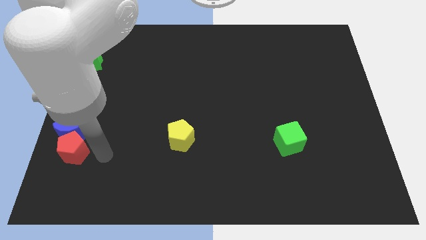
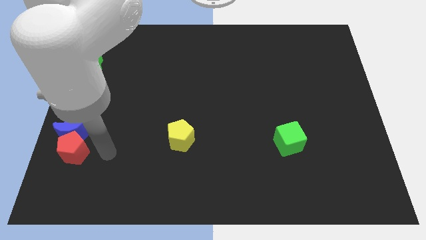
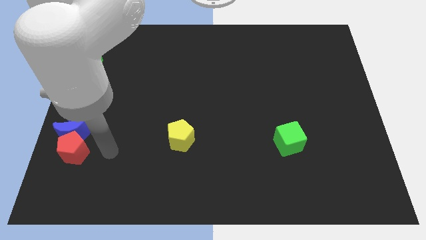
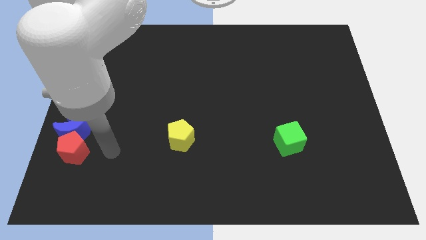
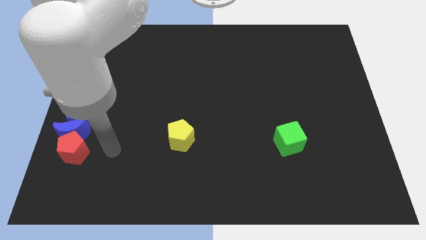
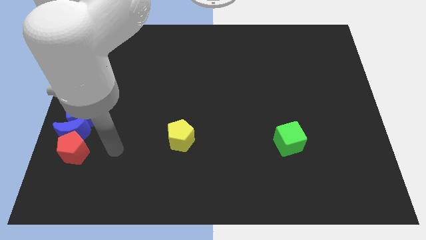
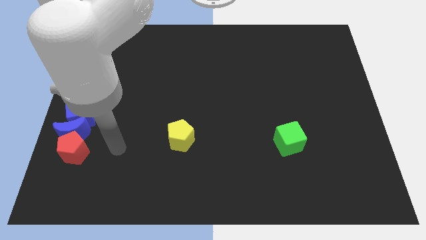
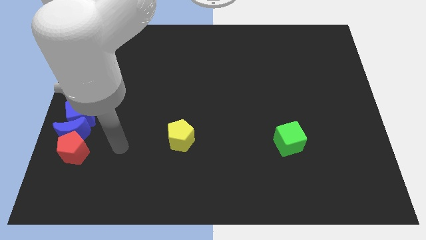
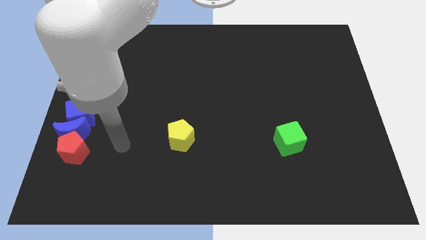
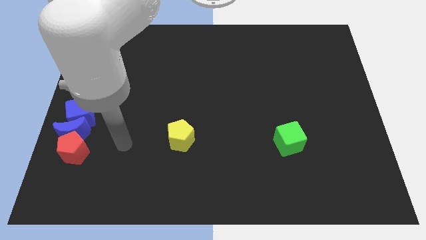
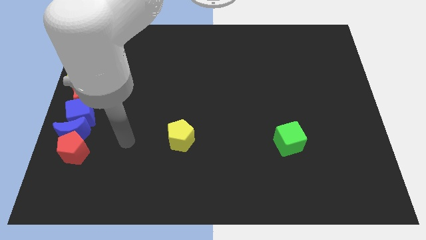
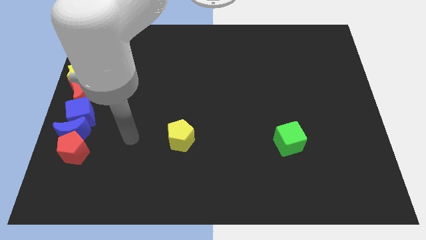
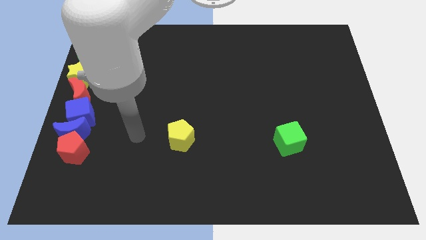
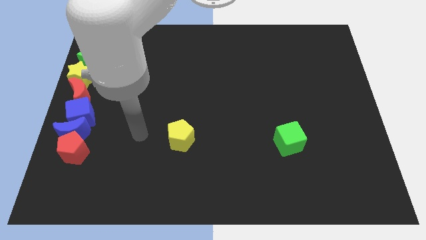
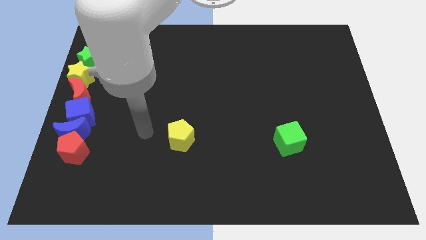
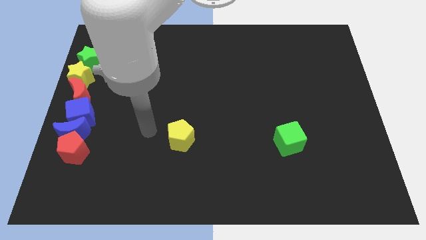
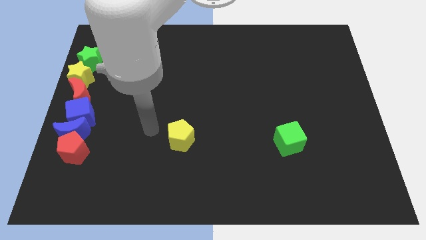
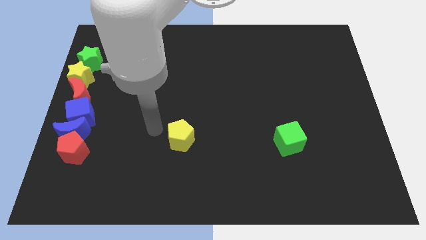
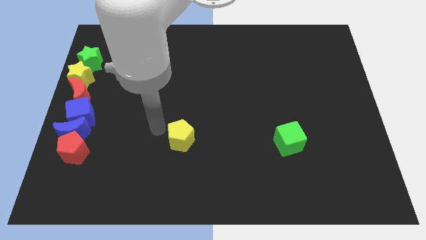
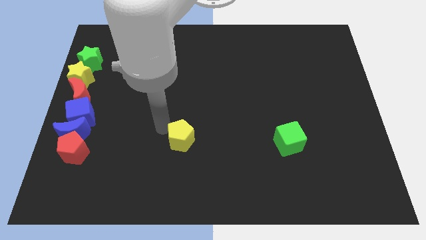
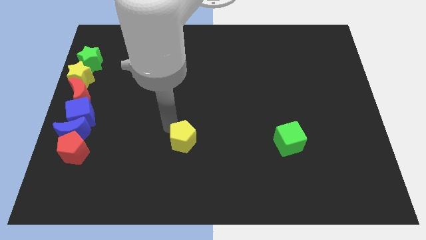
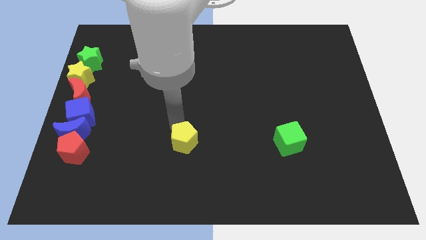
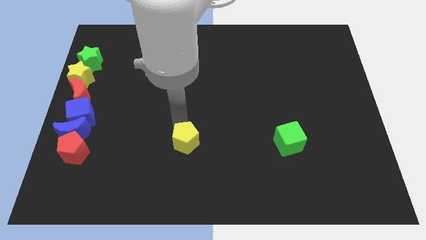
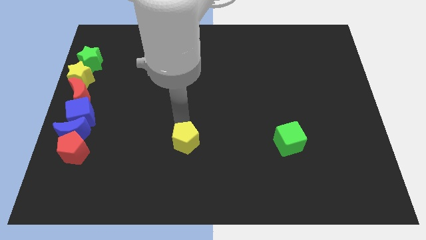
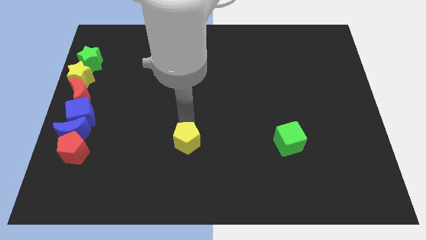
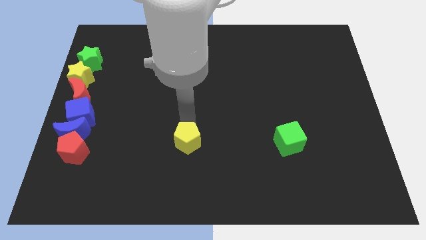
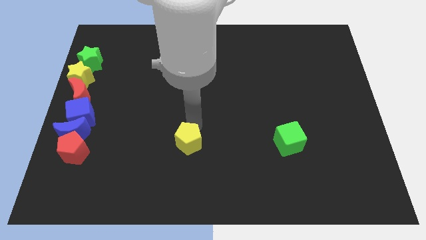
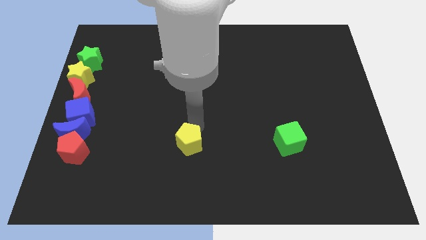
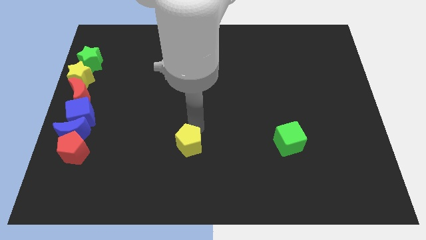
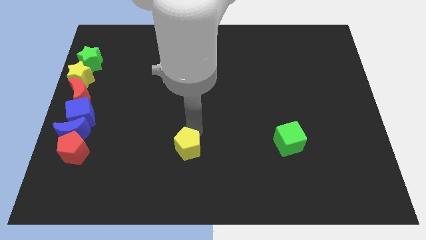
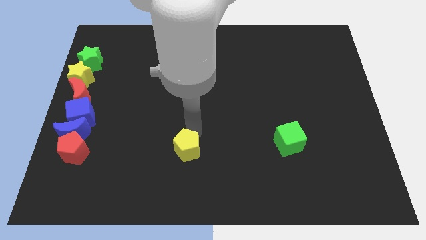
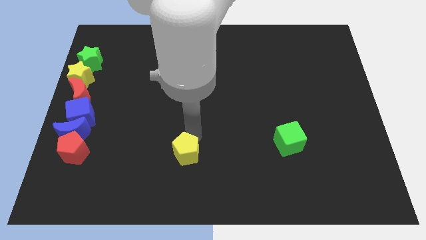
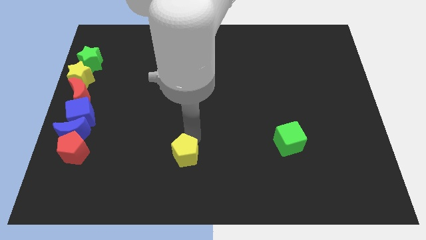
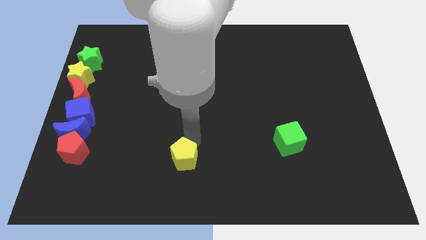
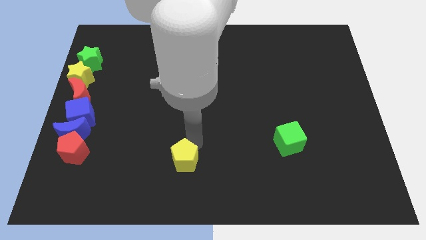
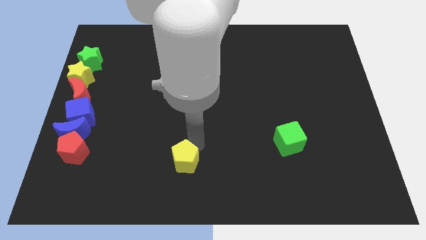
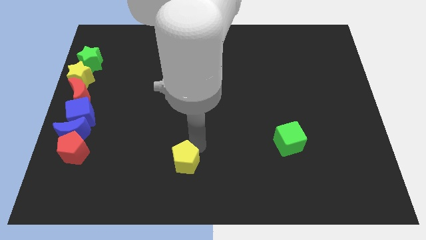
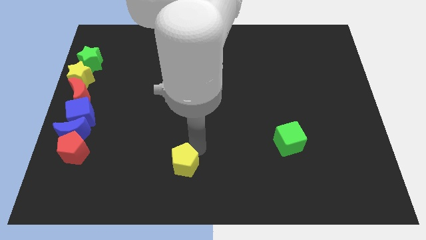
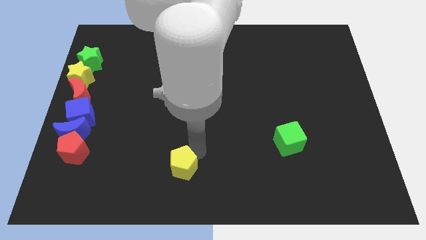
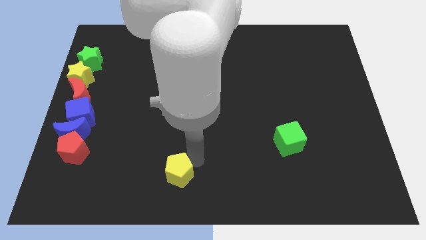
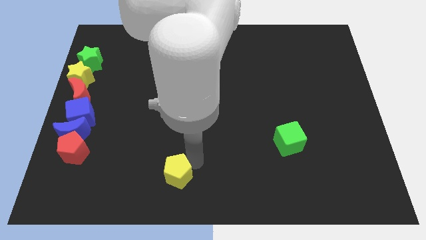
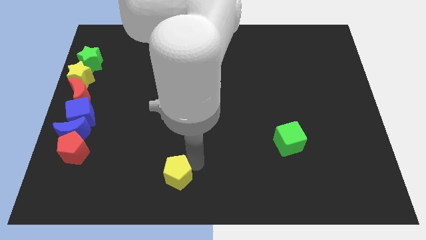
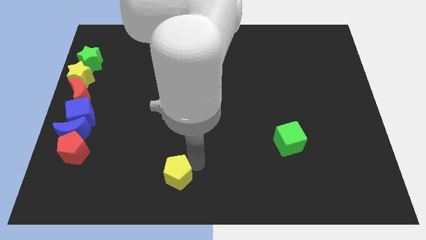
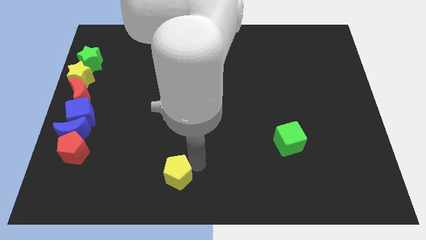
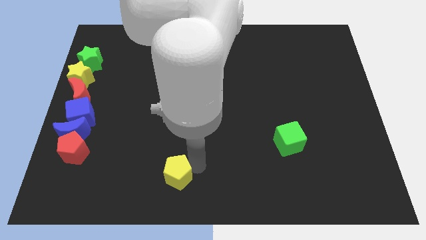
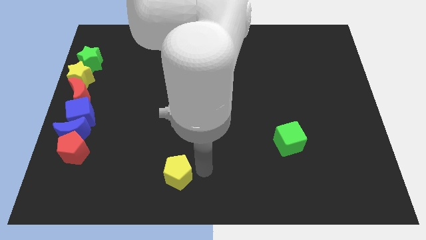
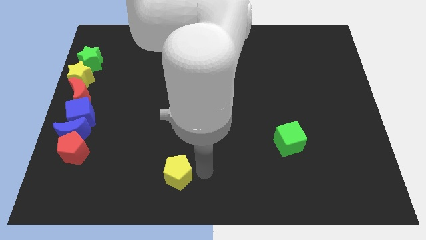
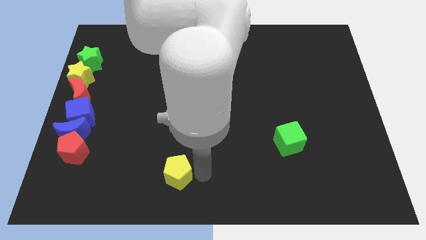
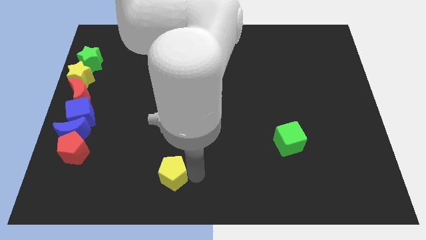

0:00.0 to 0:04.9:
push the yellow pentagon to the bottom side

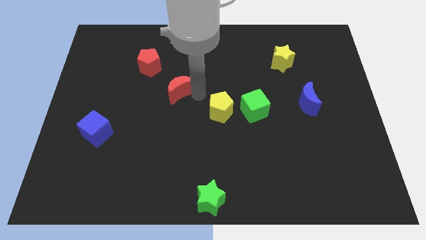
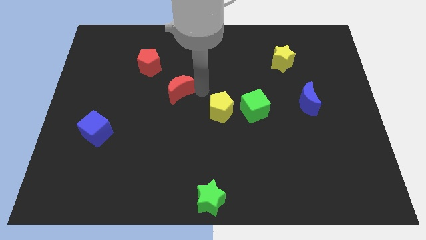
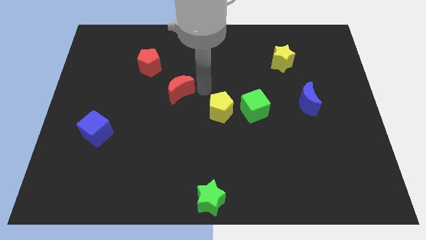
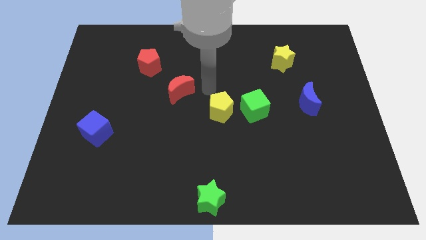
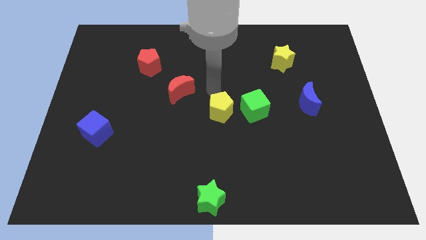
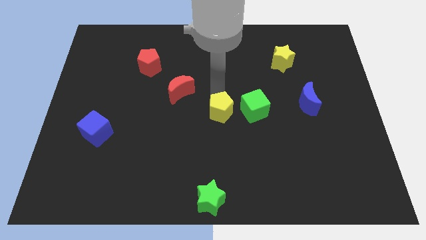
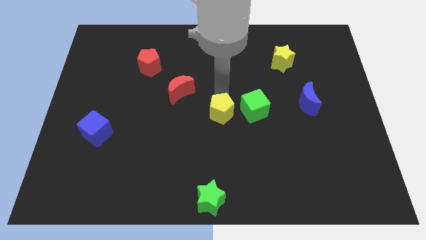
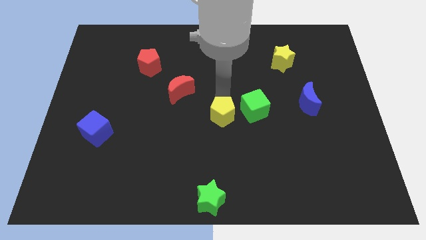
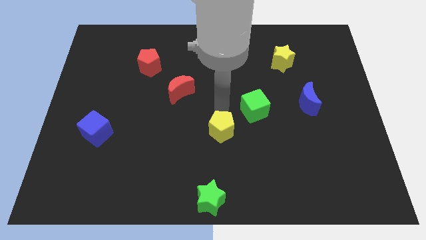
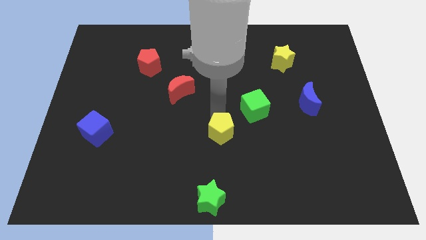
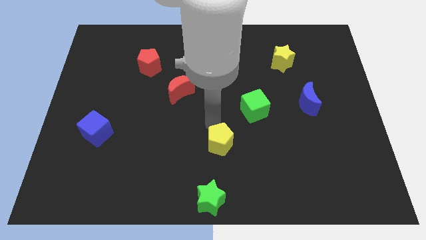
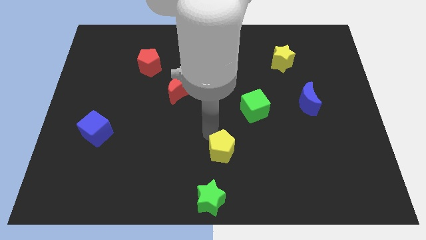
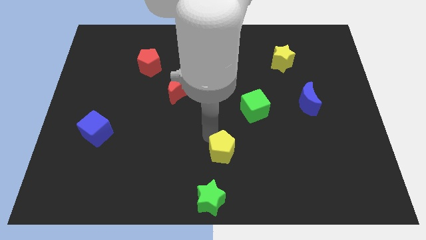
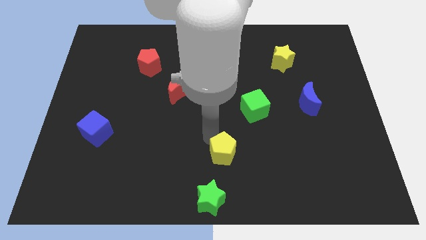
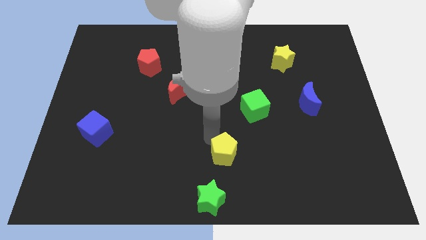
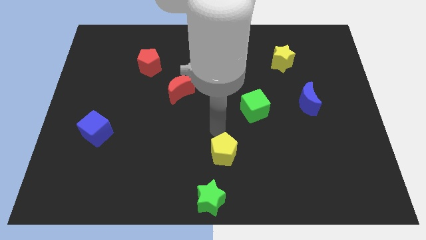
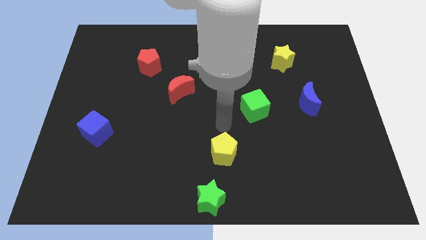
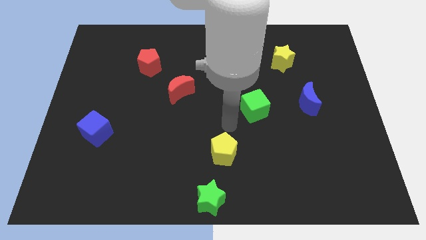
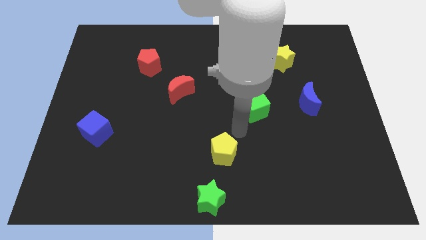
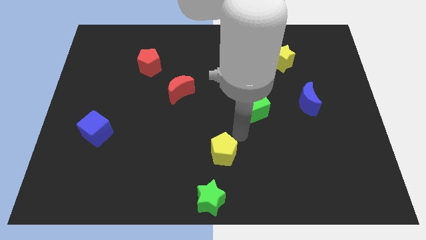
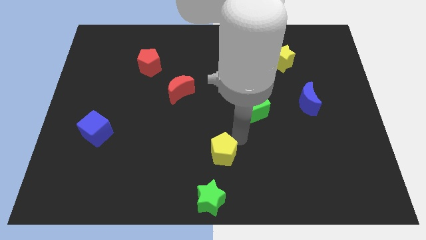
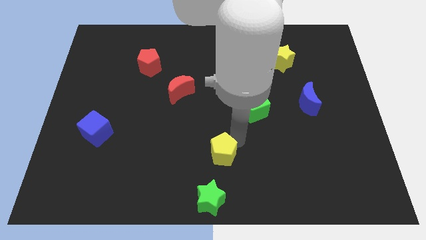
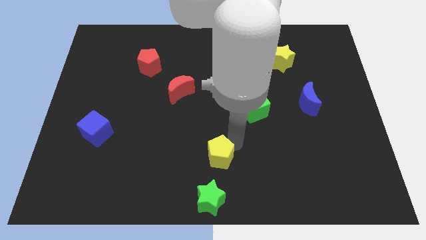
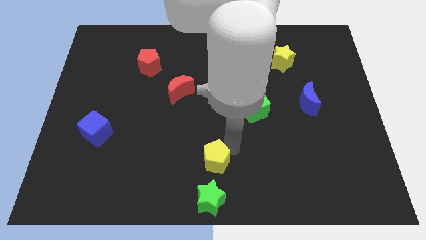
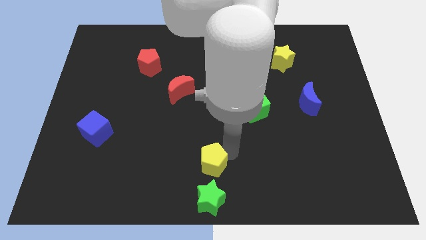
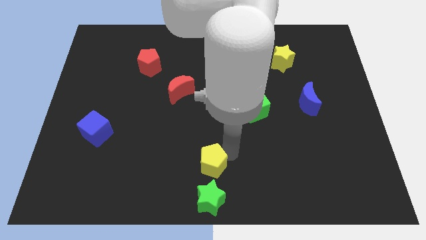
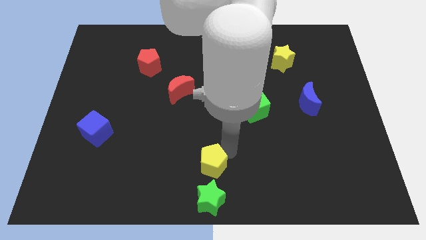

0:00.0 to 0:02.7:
move the yellow pentagon above the green star

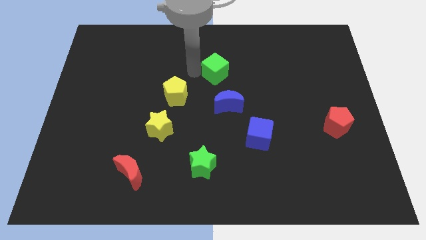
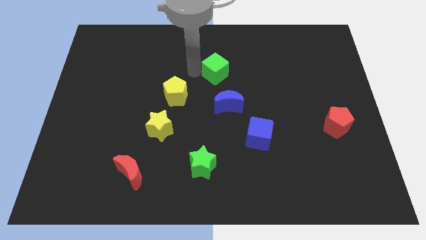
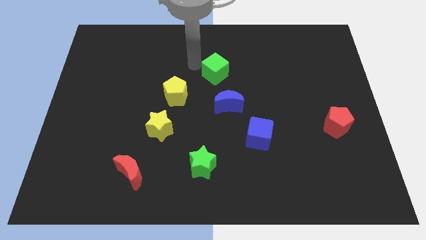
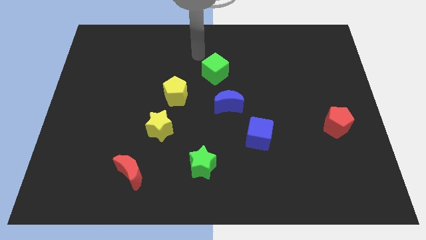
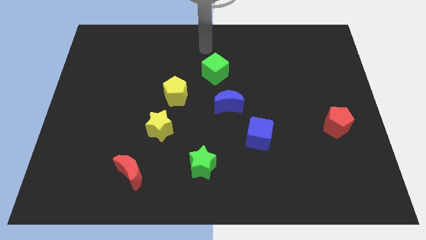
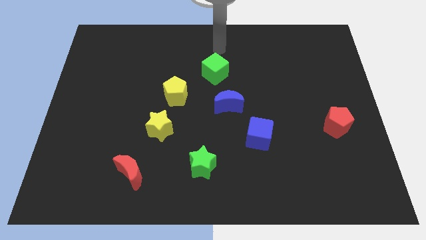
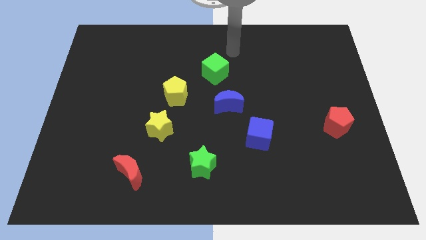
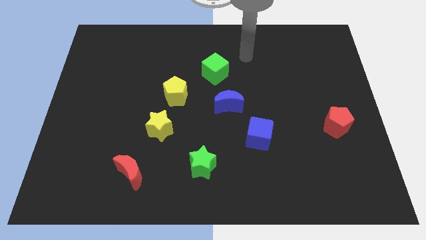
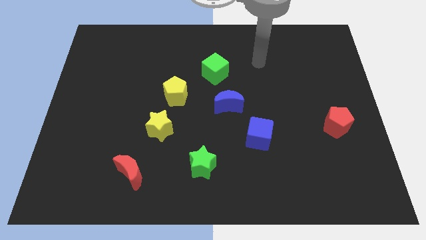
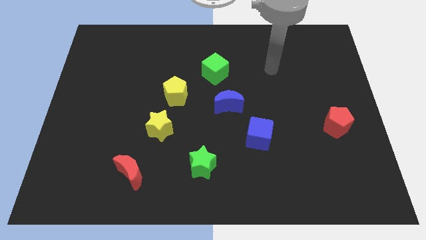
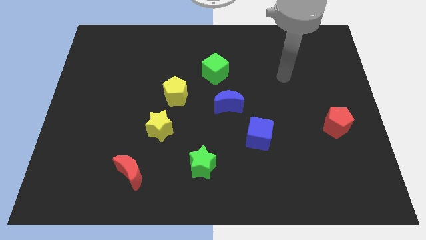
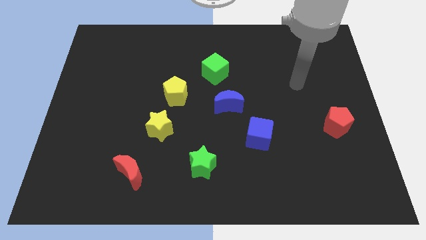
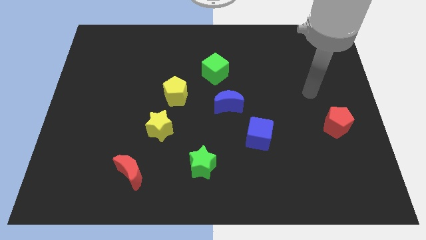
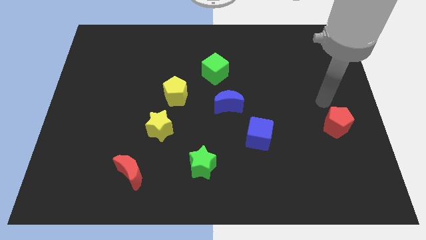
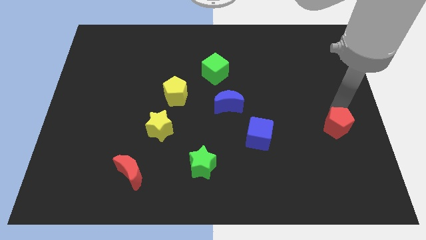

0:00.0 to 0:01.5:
point your arm at the top of red pentagon
